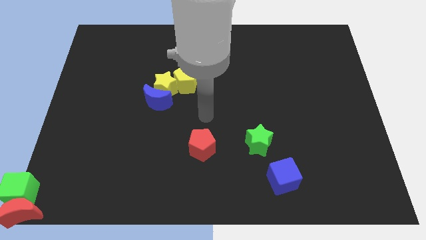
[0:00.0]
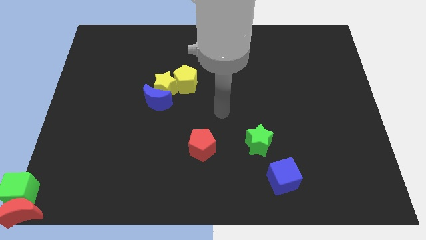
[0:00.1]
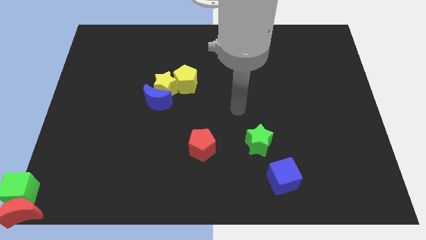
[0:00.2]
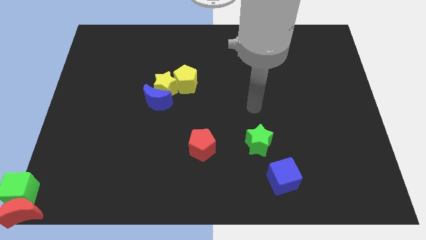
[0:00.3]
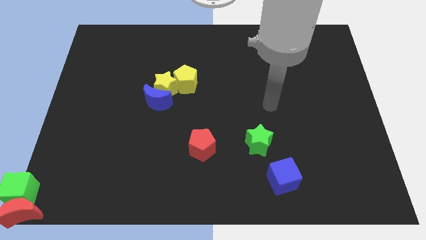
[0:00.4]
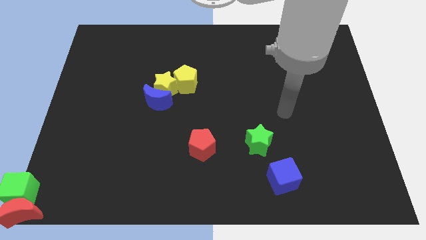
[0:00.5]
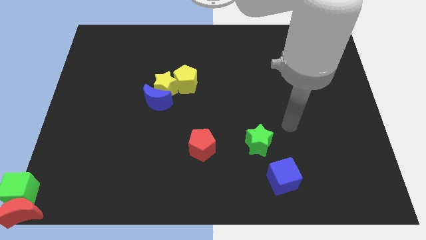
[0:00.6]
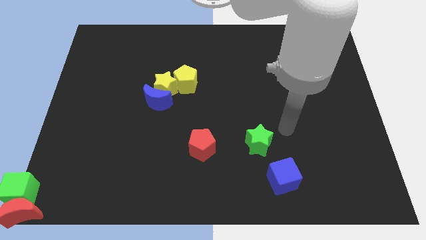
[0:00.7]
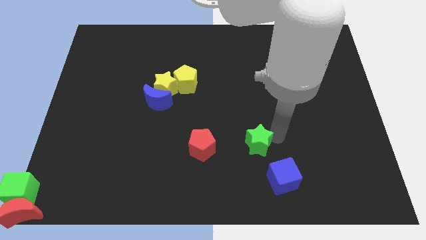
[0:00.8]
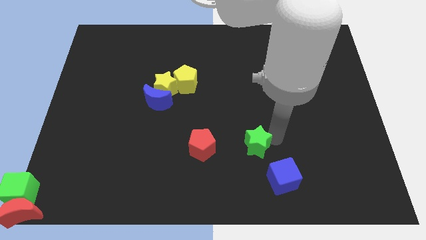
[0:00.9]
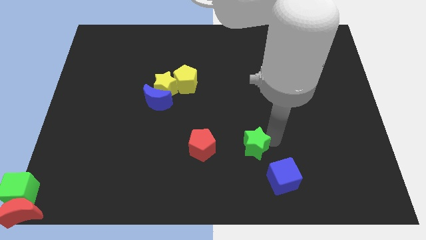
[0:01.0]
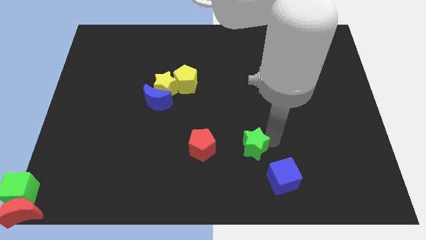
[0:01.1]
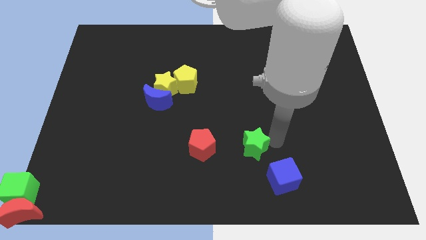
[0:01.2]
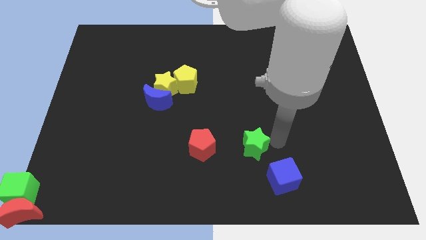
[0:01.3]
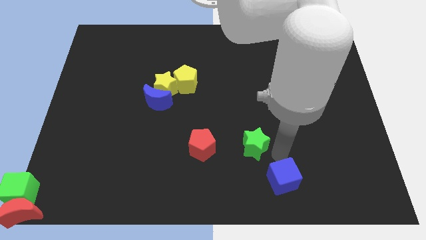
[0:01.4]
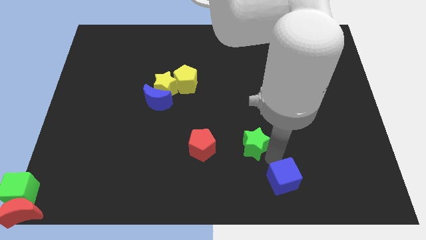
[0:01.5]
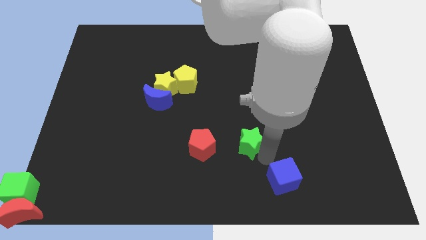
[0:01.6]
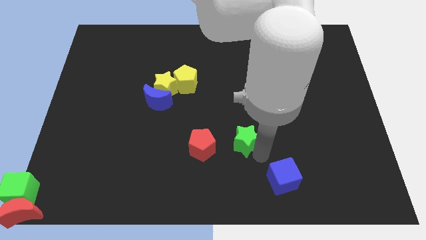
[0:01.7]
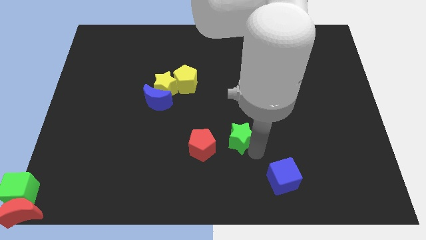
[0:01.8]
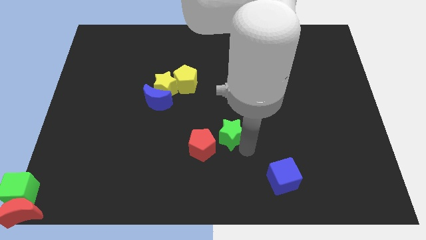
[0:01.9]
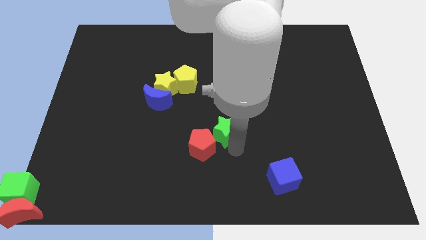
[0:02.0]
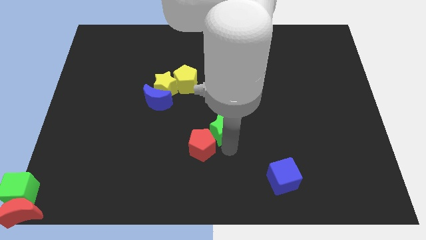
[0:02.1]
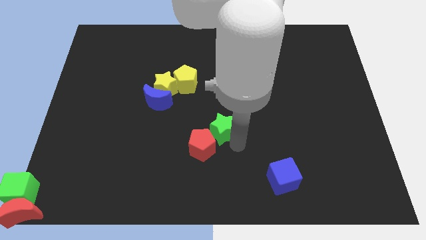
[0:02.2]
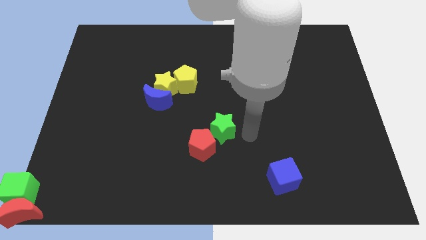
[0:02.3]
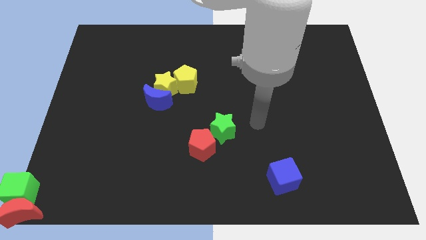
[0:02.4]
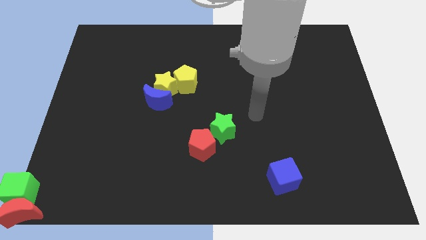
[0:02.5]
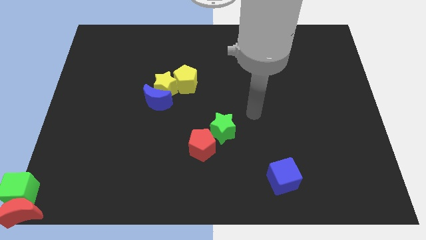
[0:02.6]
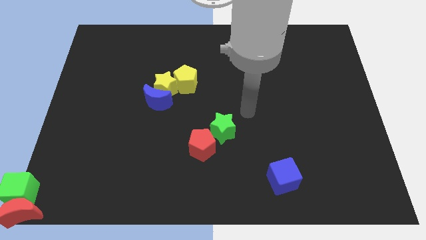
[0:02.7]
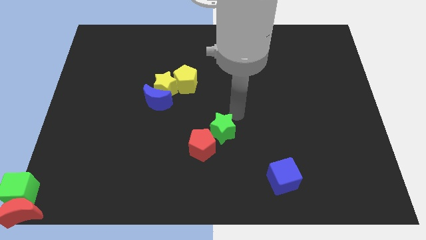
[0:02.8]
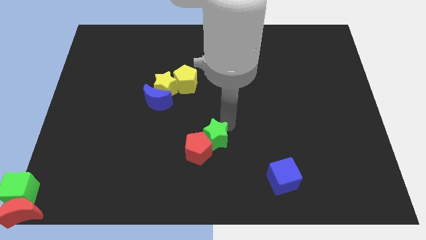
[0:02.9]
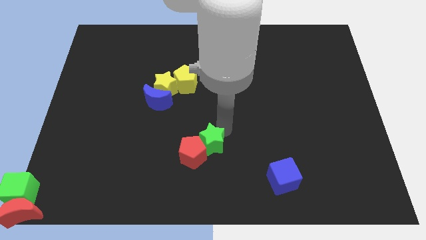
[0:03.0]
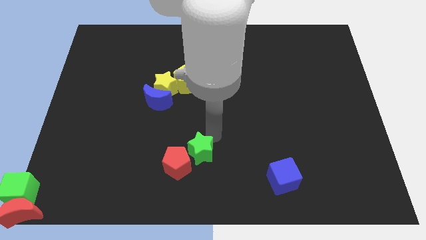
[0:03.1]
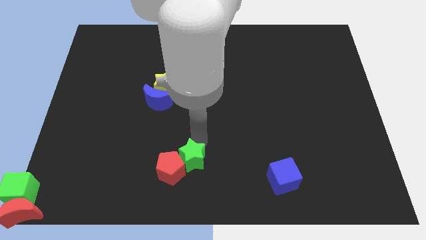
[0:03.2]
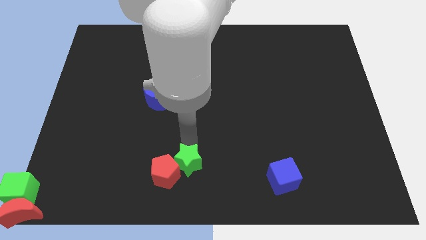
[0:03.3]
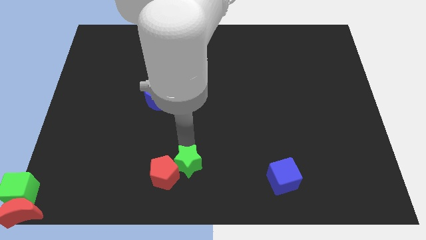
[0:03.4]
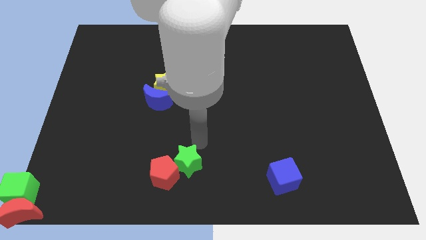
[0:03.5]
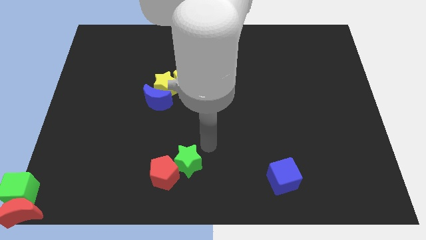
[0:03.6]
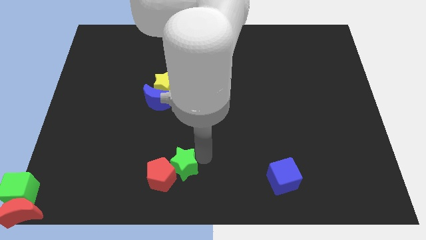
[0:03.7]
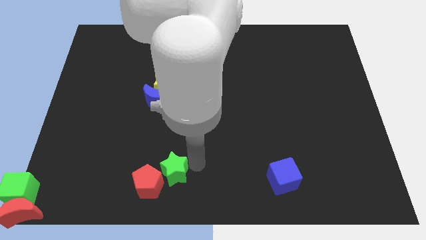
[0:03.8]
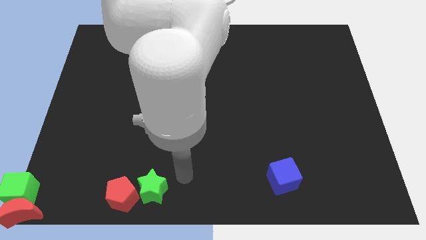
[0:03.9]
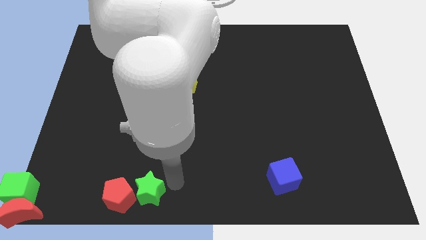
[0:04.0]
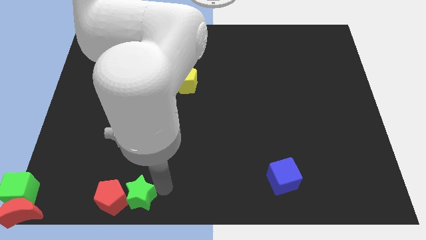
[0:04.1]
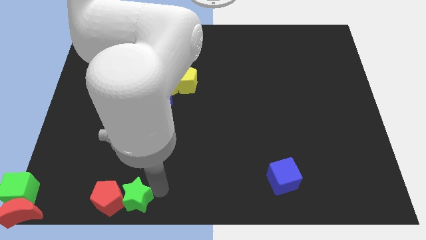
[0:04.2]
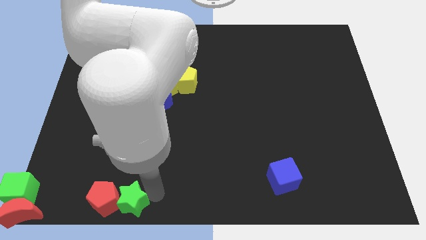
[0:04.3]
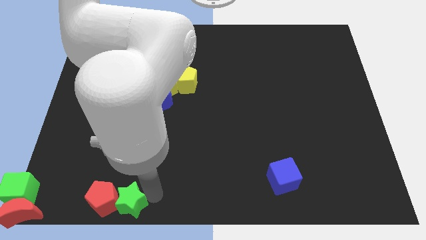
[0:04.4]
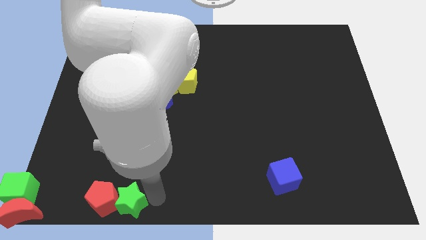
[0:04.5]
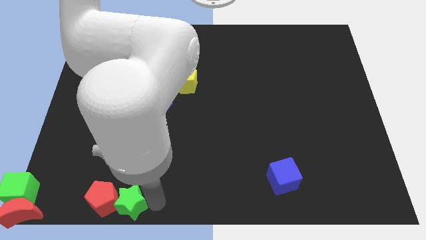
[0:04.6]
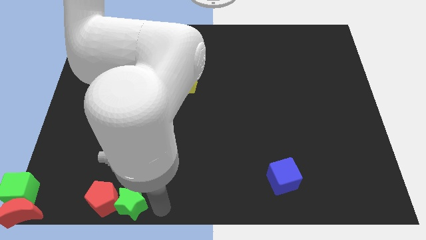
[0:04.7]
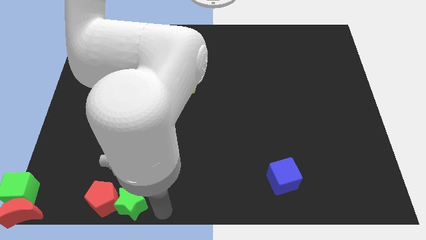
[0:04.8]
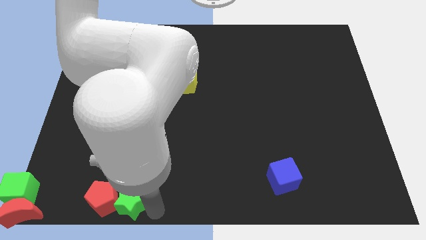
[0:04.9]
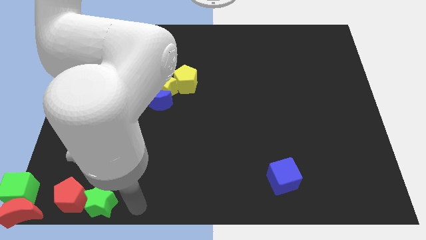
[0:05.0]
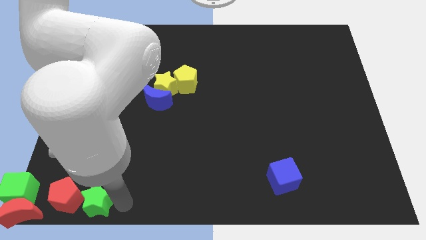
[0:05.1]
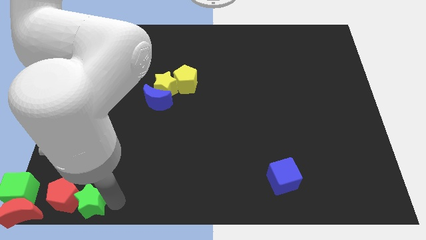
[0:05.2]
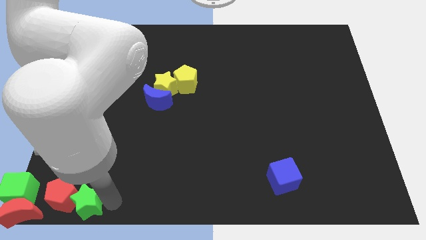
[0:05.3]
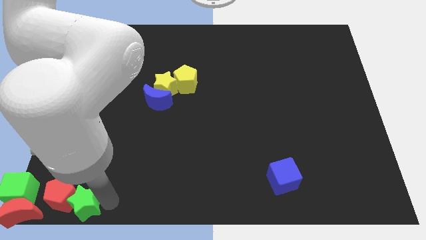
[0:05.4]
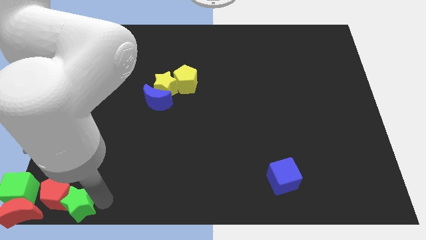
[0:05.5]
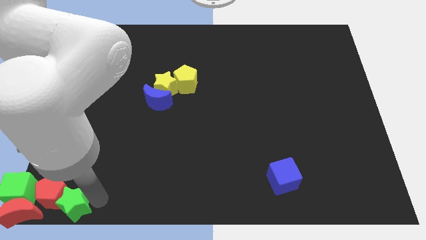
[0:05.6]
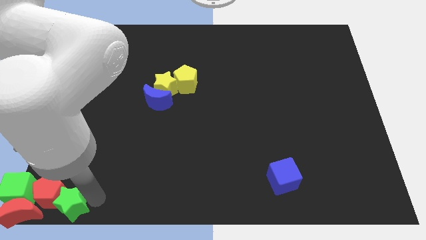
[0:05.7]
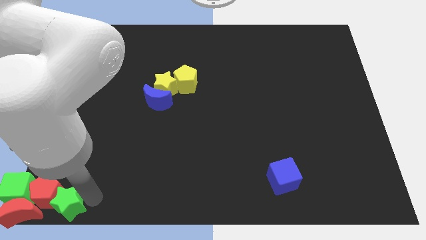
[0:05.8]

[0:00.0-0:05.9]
move the green star and red pentagon towards bottom left

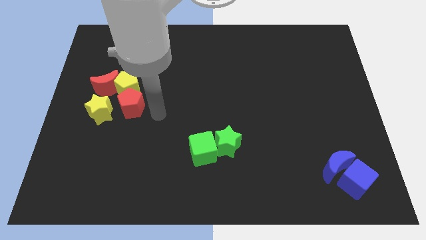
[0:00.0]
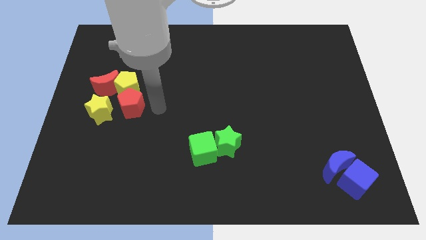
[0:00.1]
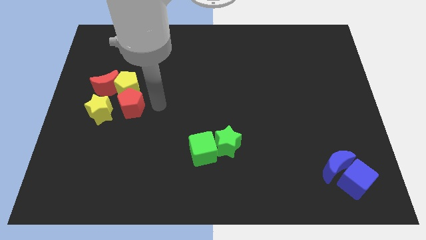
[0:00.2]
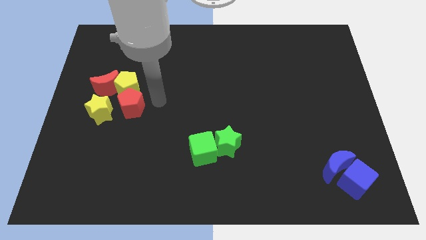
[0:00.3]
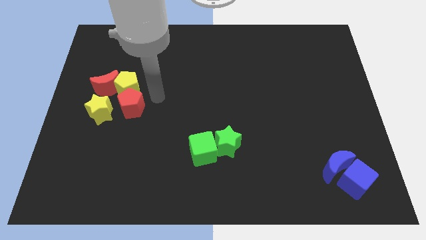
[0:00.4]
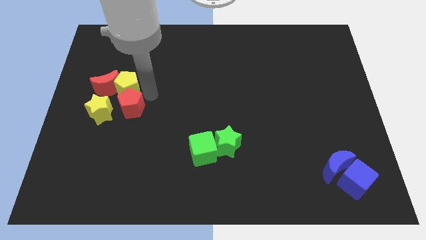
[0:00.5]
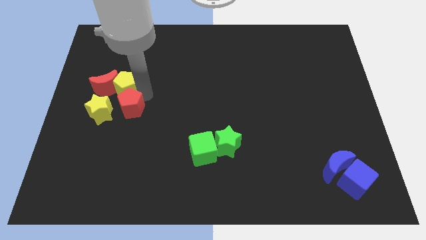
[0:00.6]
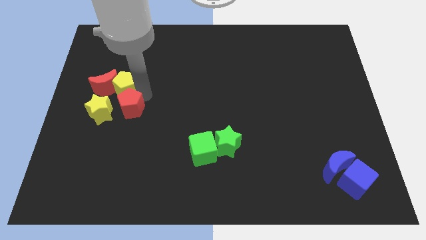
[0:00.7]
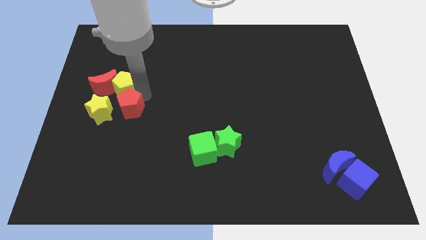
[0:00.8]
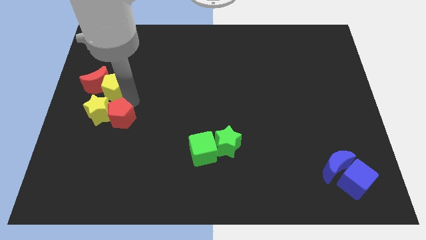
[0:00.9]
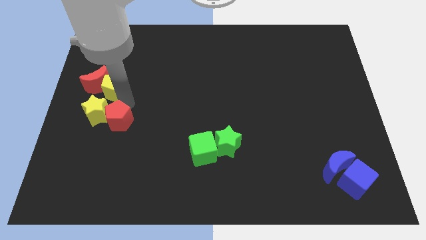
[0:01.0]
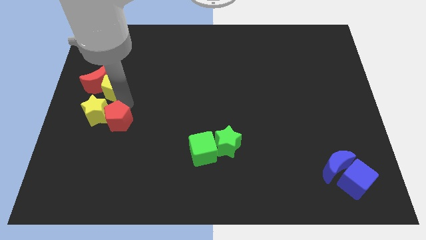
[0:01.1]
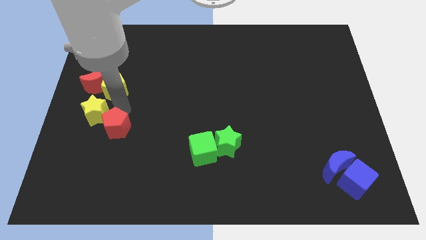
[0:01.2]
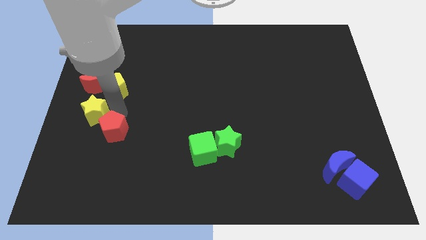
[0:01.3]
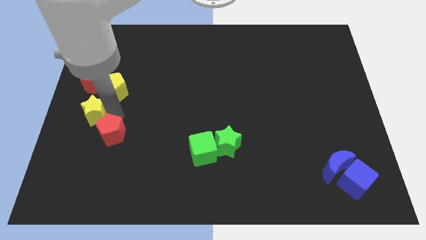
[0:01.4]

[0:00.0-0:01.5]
push yellow pentagon into the red moon

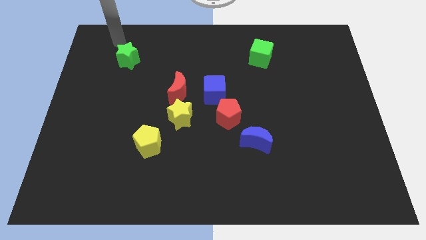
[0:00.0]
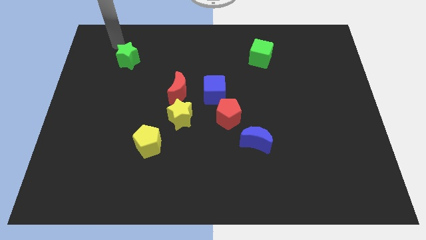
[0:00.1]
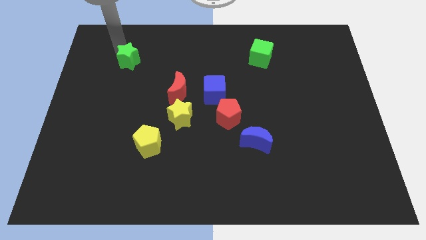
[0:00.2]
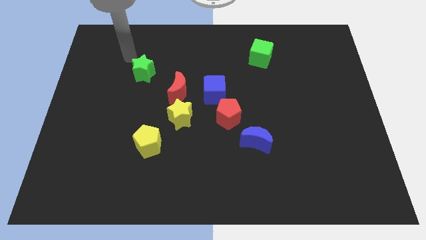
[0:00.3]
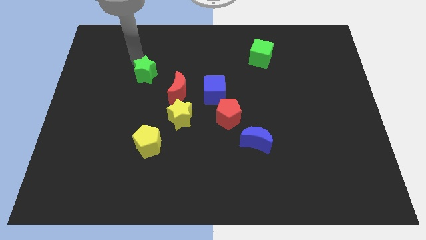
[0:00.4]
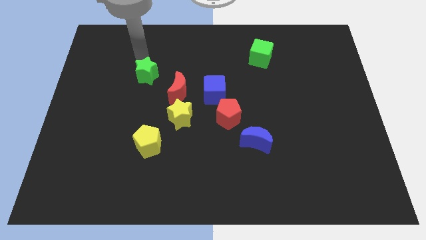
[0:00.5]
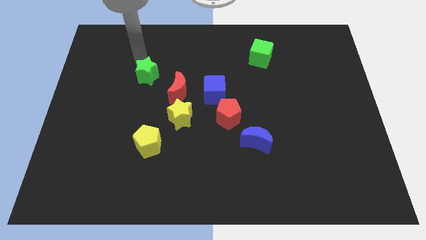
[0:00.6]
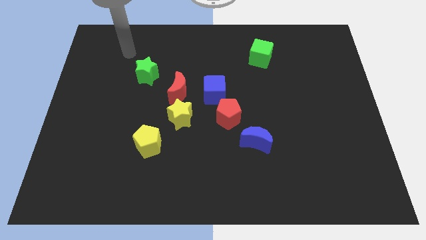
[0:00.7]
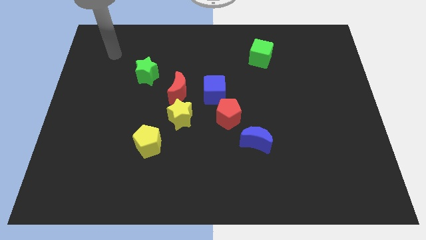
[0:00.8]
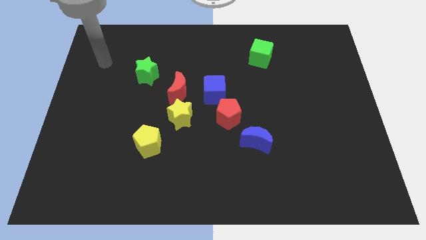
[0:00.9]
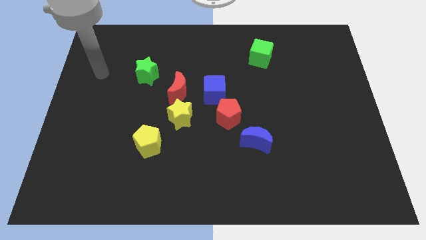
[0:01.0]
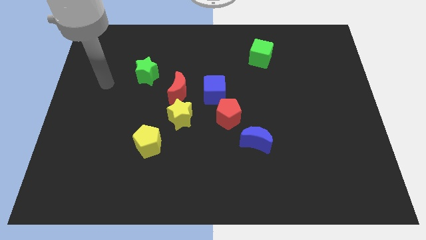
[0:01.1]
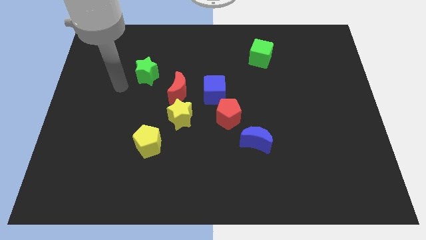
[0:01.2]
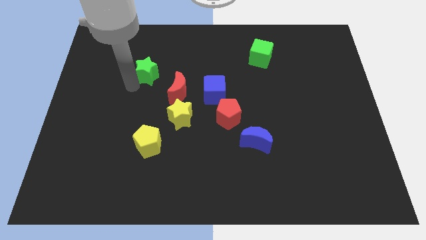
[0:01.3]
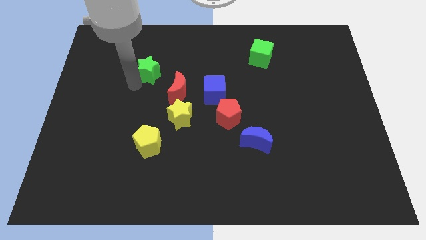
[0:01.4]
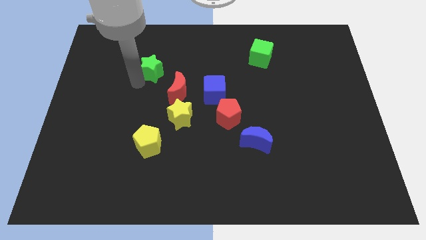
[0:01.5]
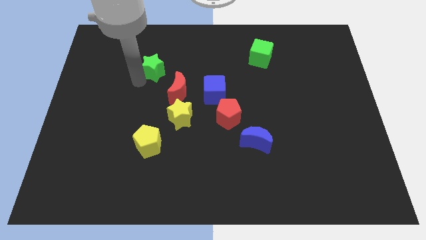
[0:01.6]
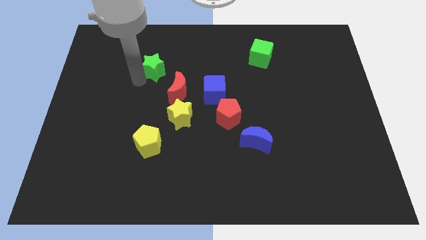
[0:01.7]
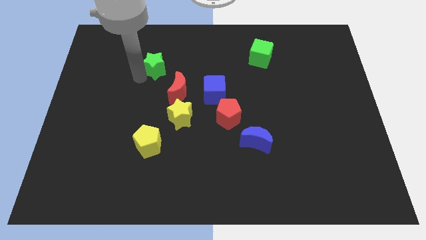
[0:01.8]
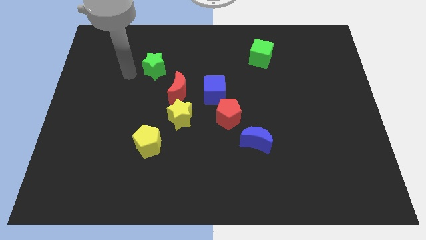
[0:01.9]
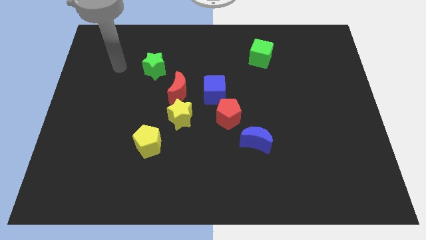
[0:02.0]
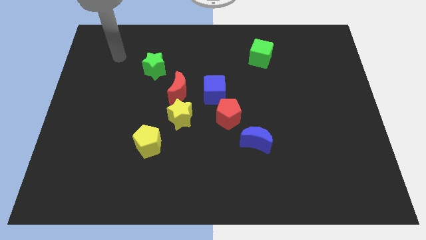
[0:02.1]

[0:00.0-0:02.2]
move the green star diagonal to the red moon
